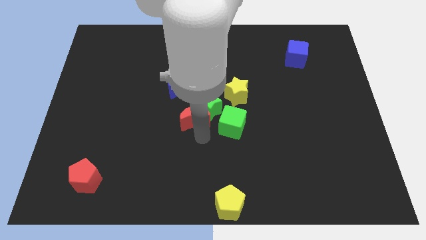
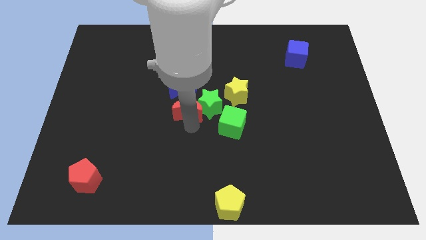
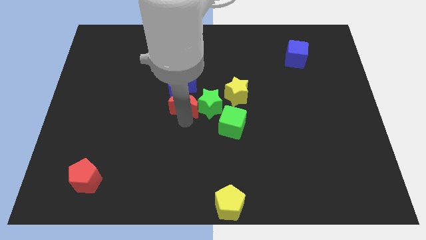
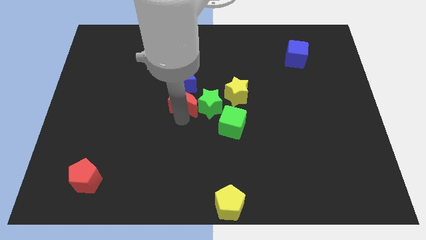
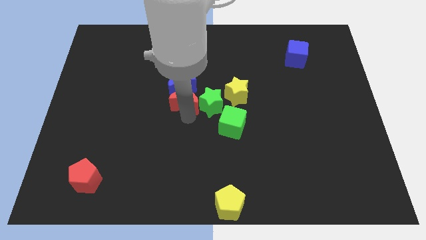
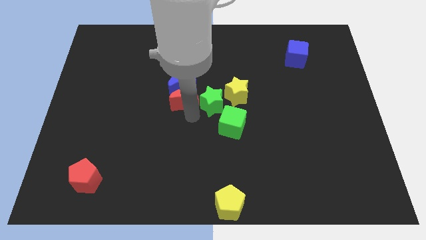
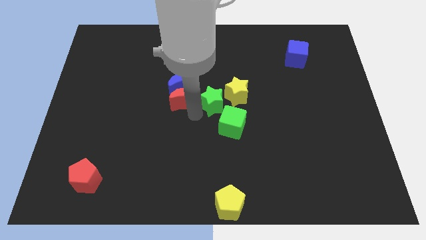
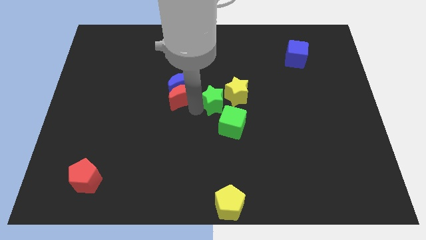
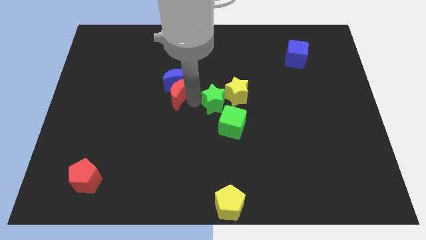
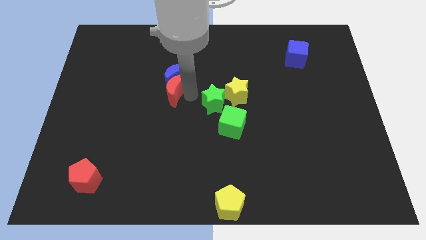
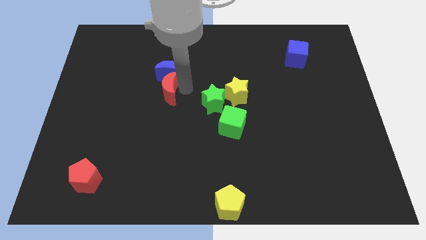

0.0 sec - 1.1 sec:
move the red moon into the blue moon

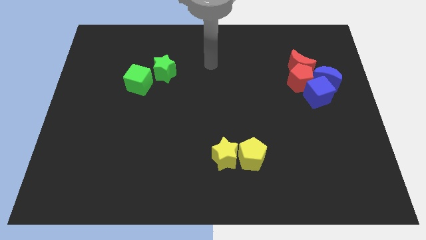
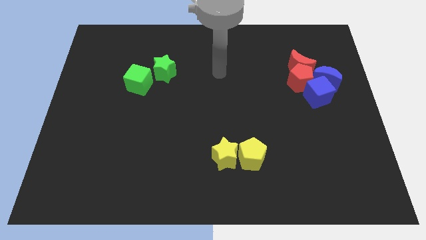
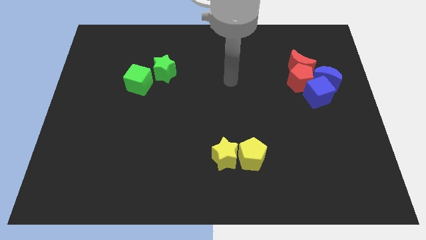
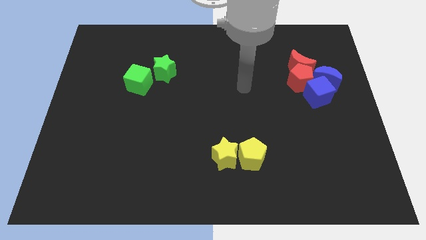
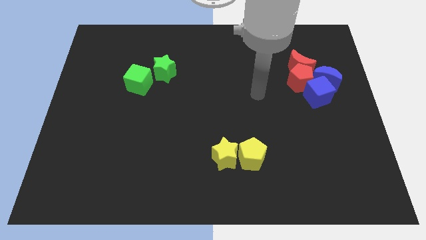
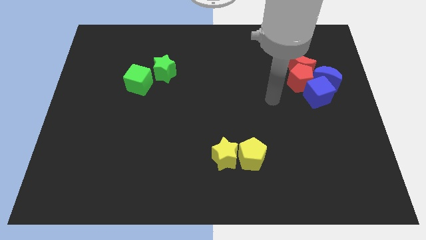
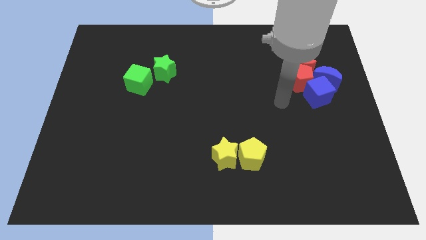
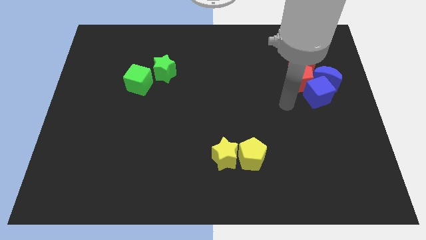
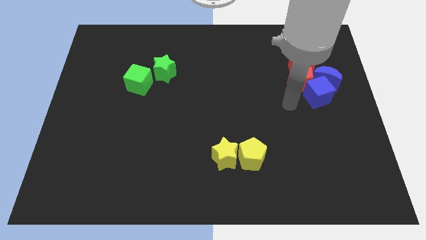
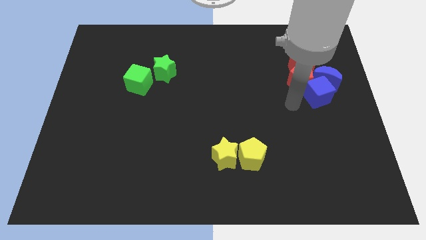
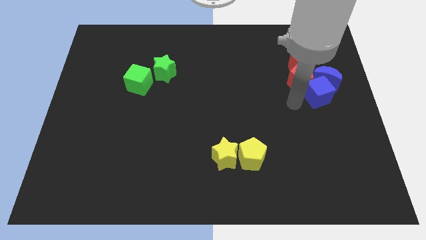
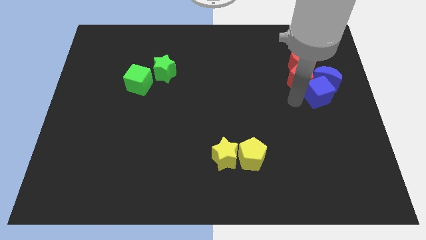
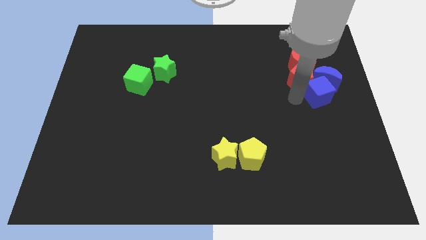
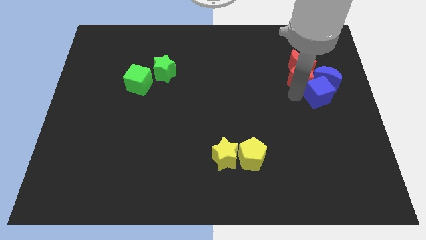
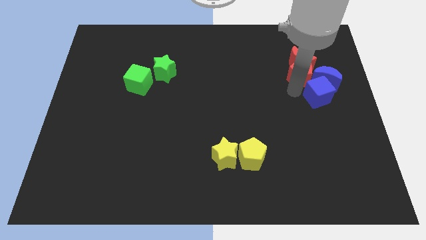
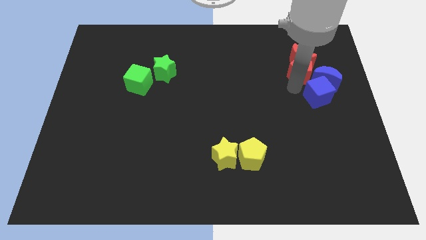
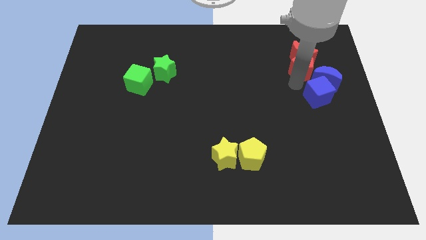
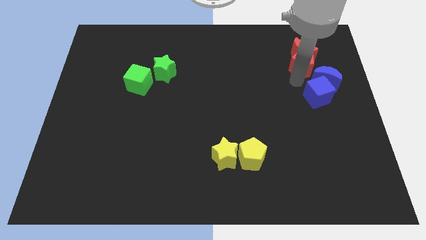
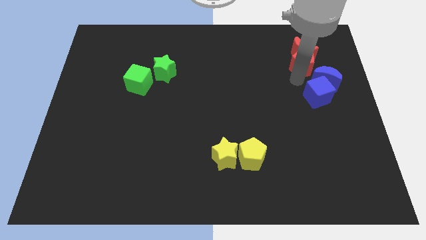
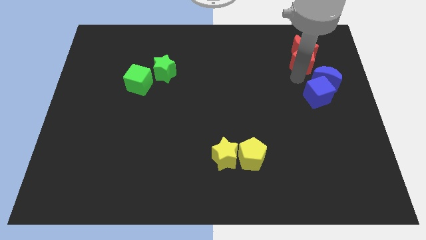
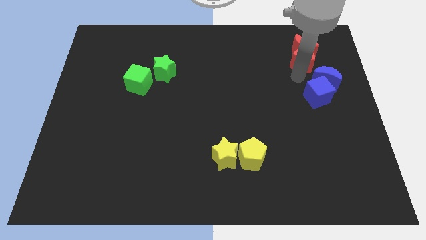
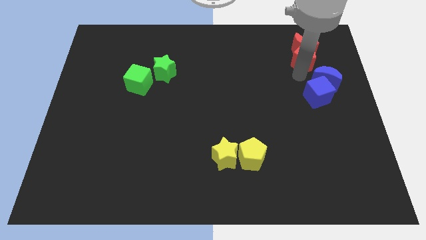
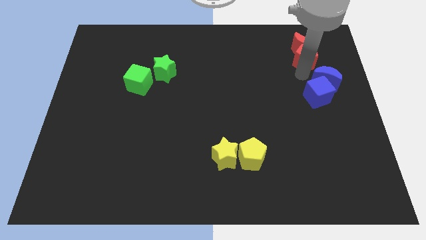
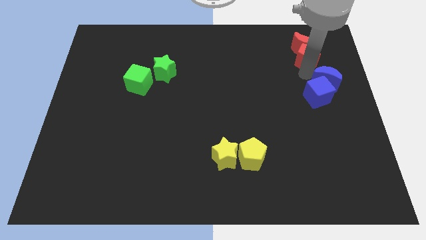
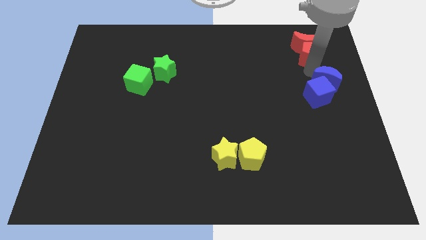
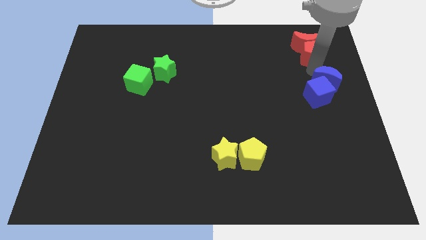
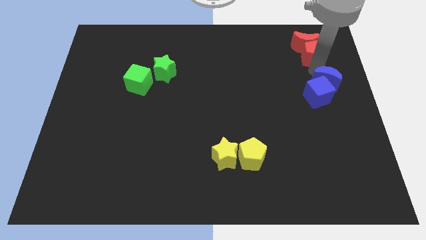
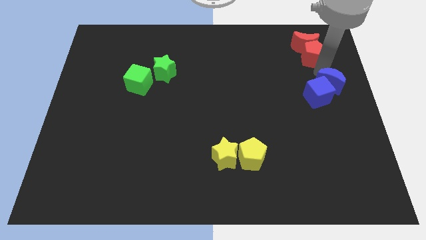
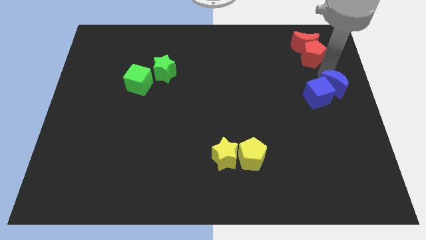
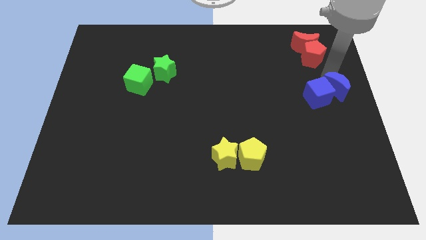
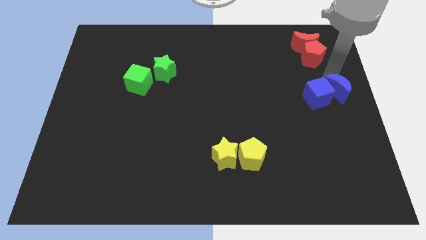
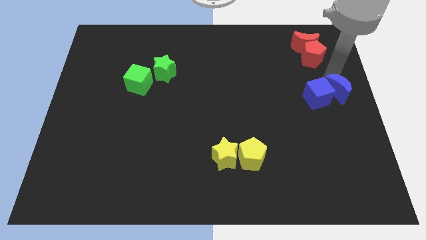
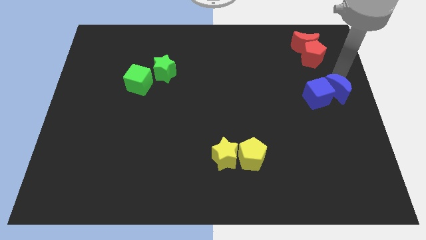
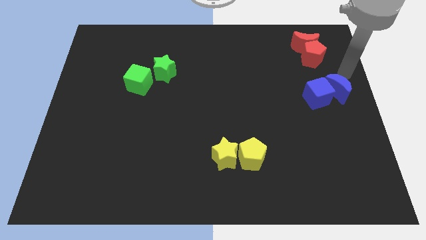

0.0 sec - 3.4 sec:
separate red blocks from blue blocks

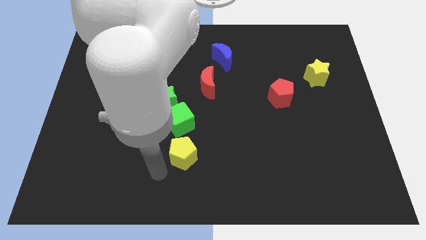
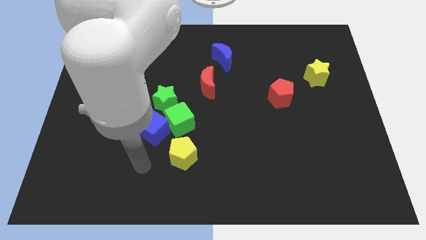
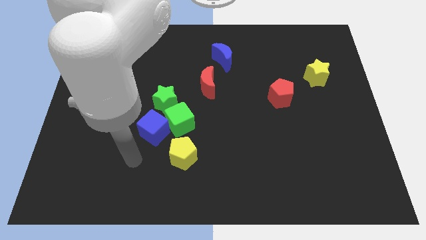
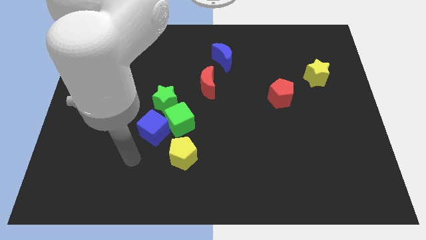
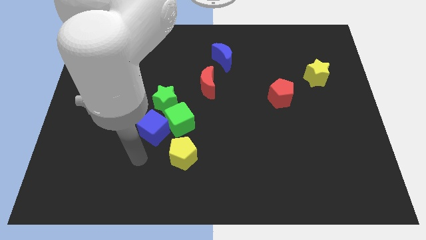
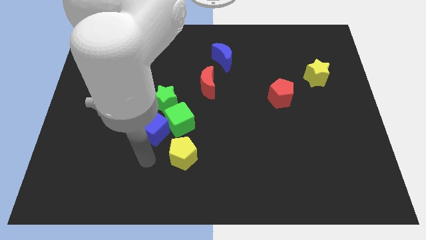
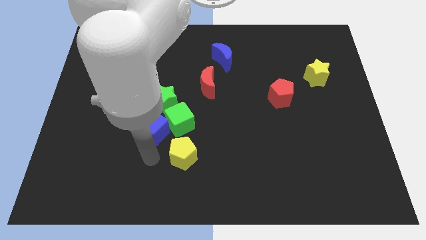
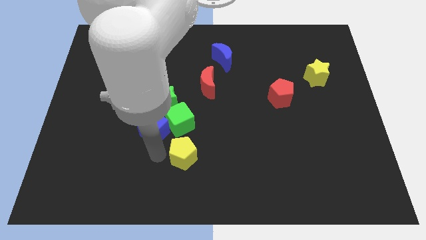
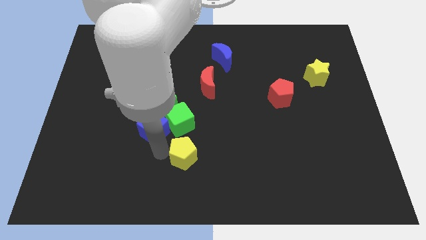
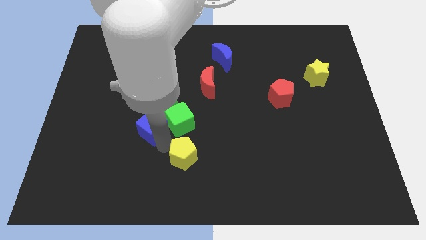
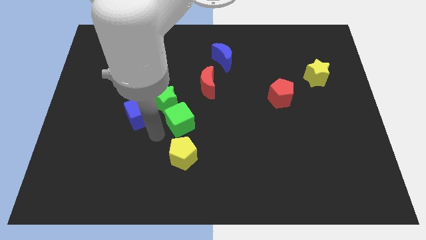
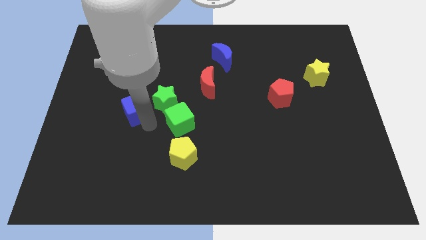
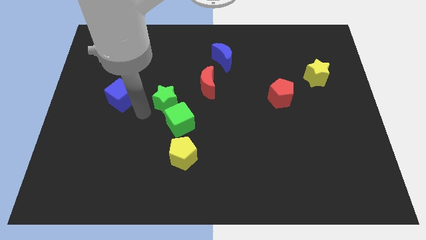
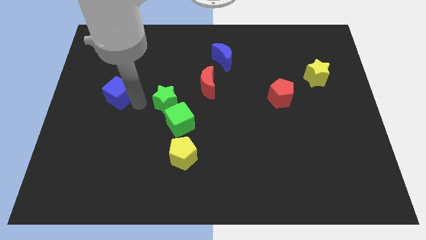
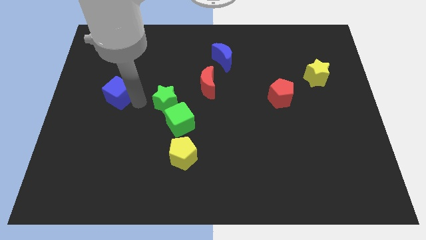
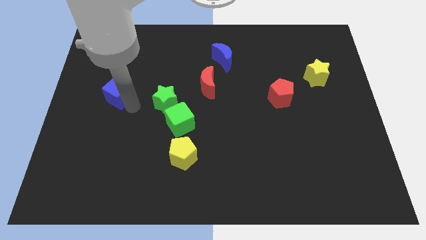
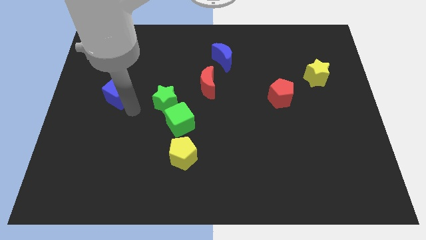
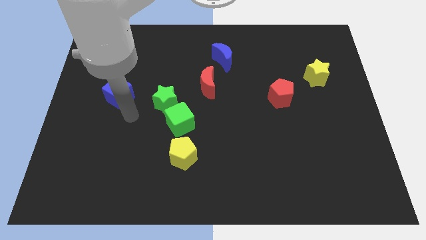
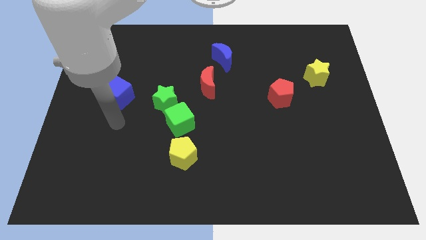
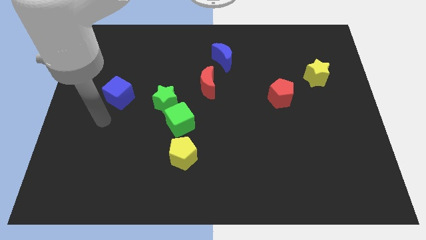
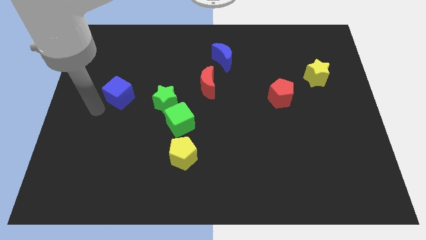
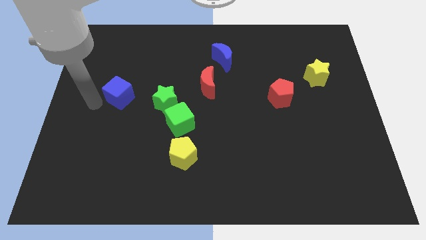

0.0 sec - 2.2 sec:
push the blue cube

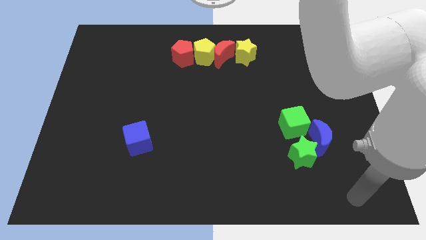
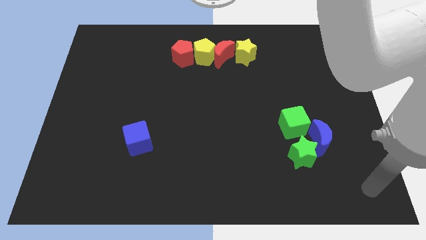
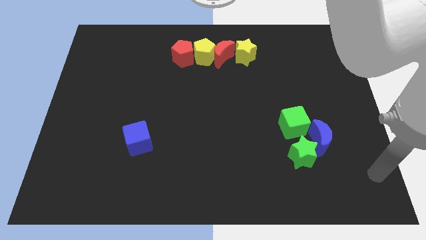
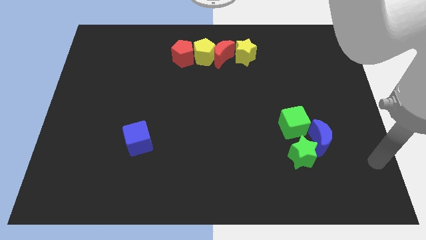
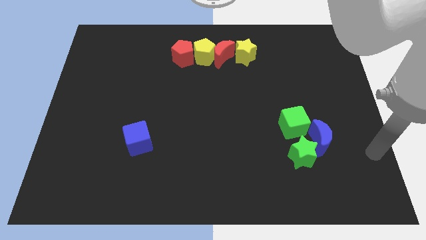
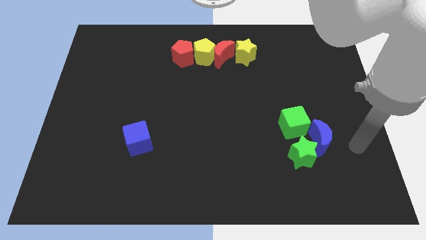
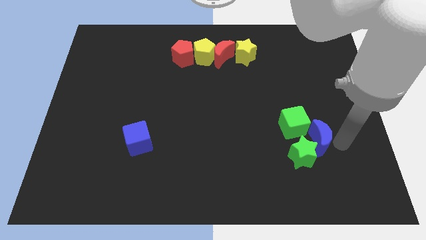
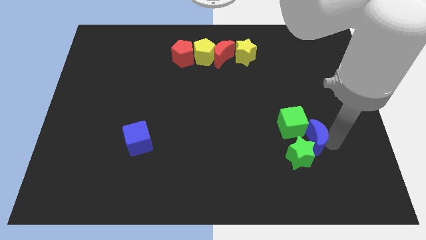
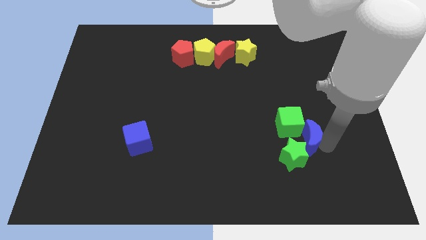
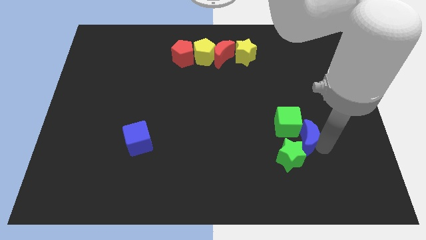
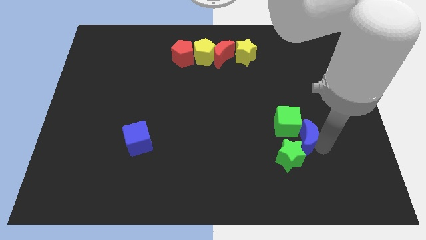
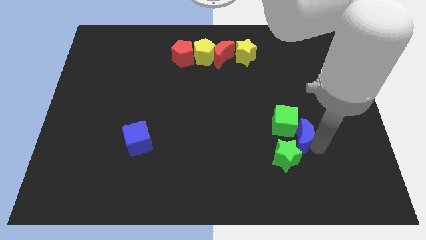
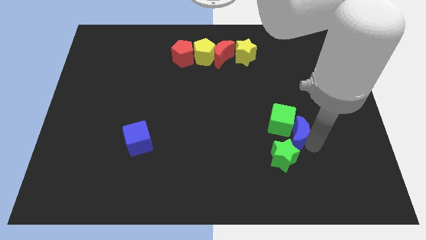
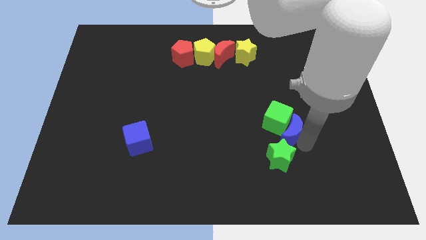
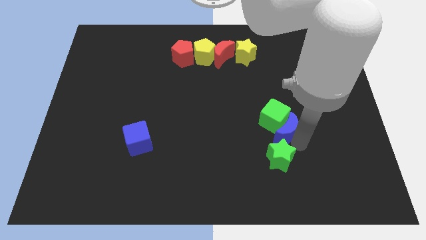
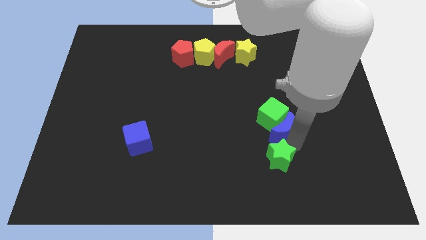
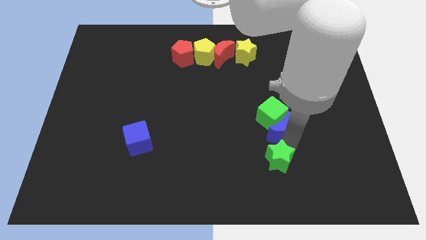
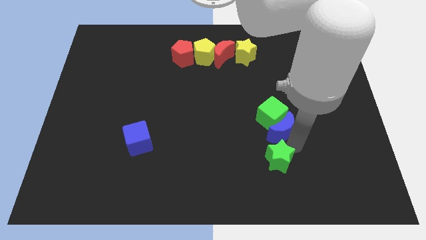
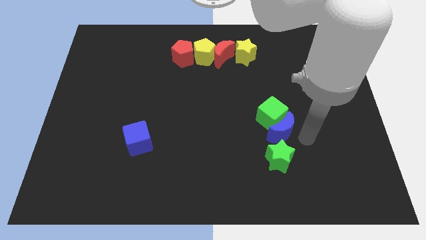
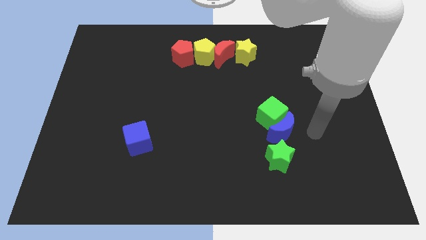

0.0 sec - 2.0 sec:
push blue crescent into green cube

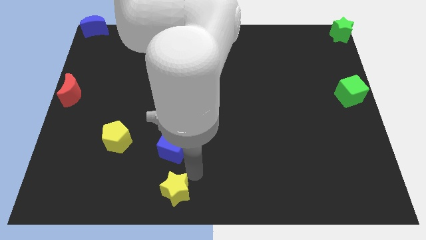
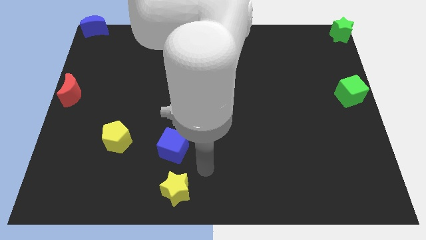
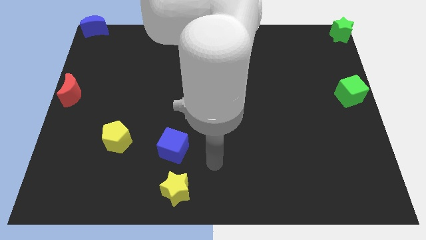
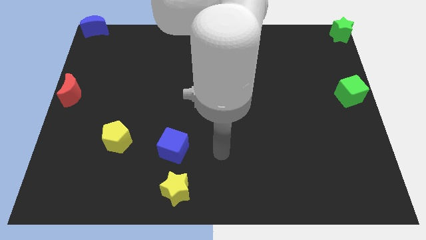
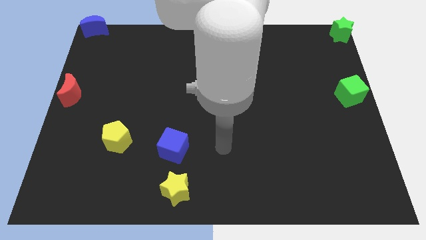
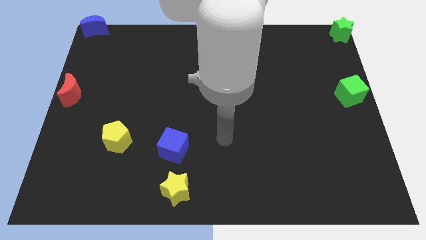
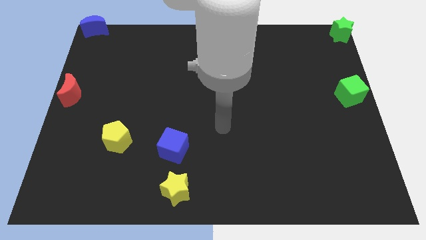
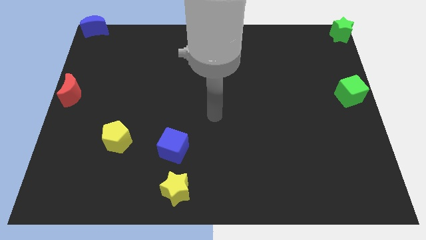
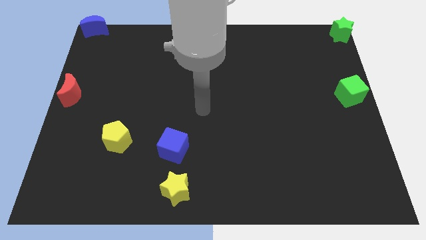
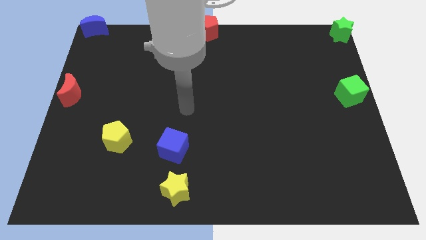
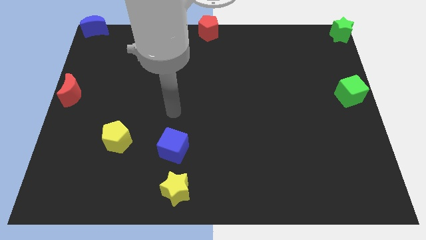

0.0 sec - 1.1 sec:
point your arm at the top of blue cube
